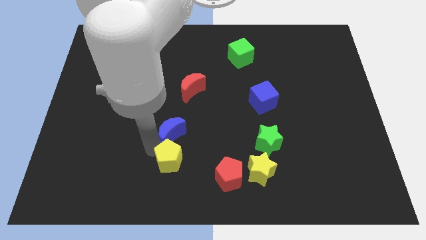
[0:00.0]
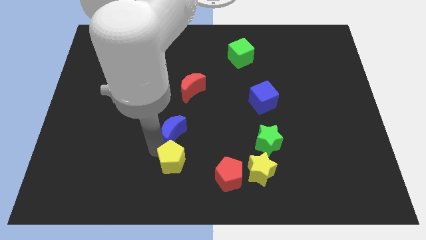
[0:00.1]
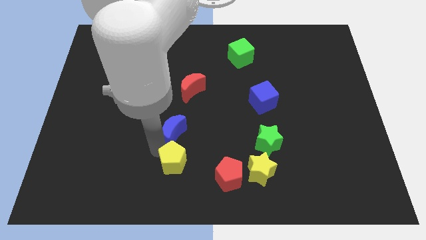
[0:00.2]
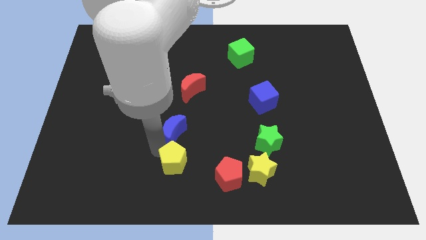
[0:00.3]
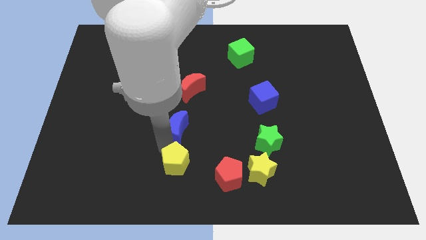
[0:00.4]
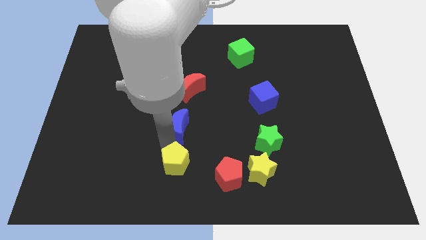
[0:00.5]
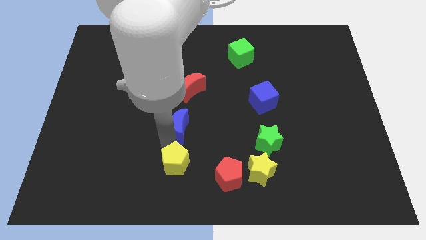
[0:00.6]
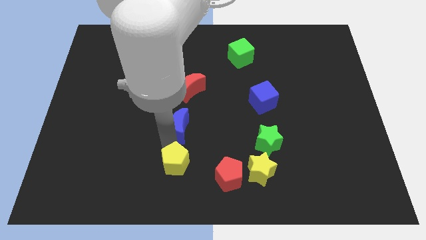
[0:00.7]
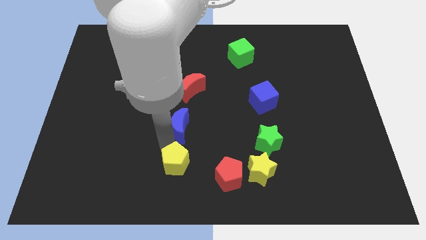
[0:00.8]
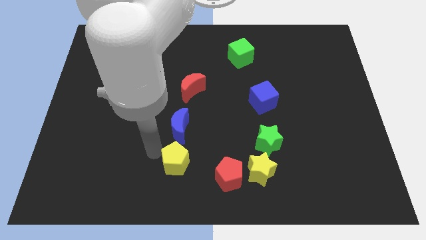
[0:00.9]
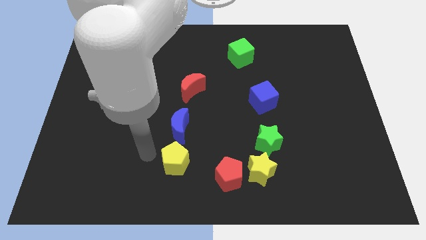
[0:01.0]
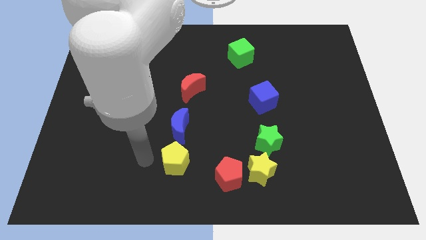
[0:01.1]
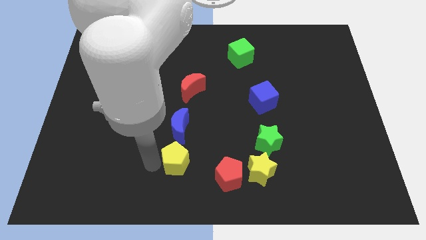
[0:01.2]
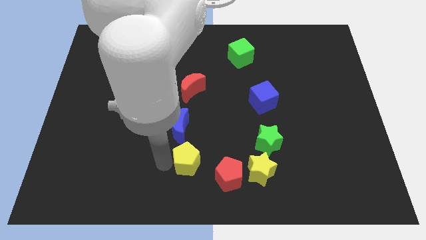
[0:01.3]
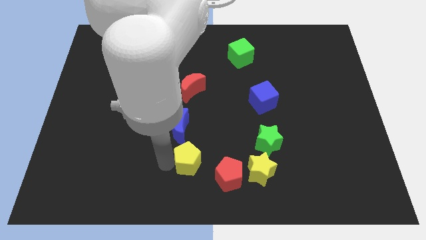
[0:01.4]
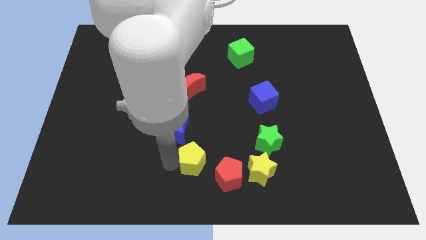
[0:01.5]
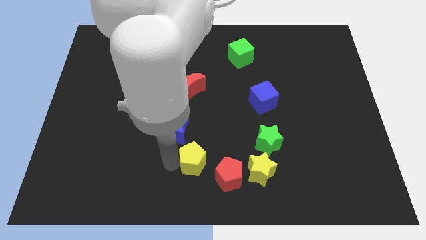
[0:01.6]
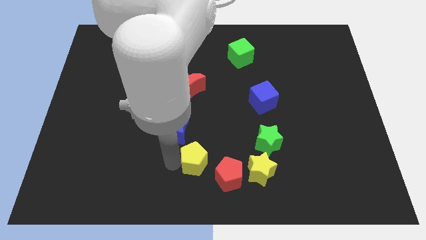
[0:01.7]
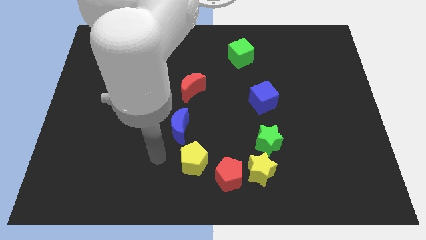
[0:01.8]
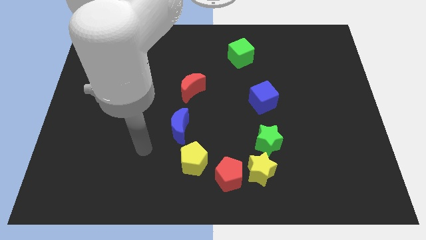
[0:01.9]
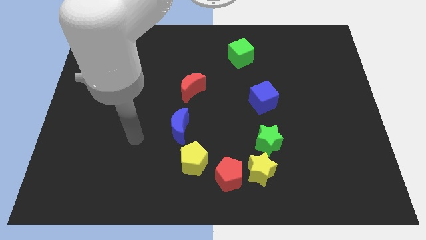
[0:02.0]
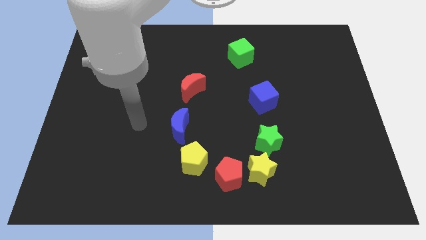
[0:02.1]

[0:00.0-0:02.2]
slide the yellow pentagon to the top left of red pentagon

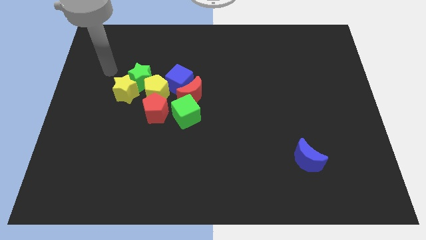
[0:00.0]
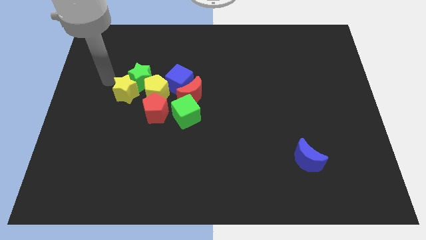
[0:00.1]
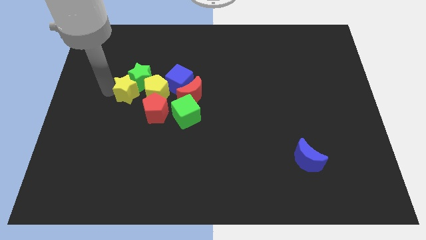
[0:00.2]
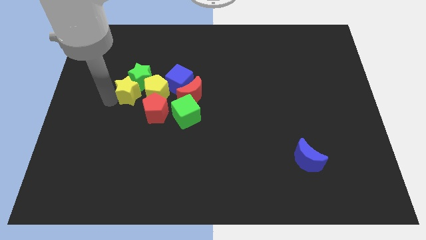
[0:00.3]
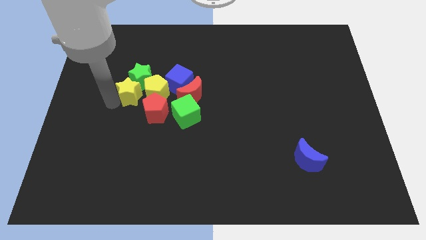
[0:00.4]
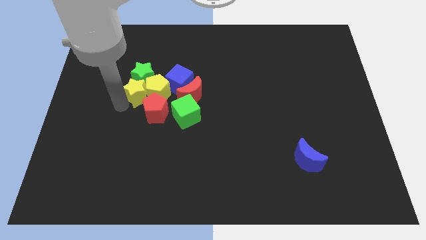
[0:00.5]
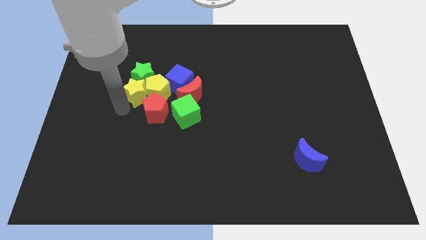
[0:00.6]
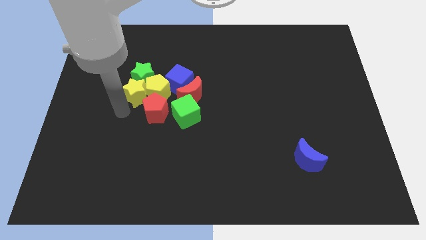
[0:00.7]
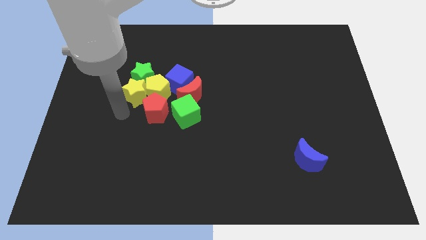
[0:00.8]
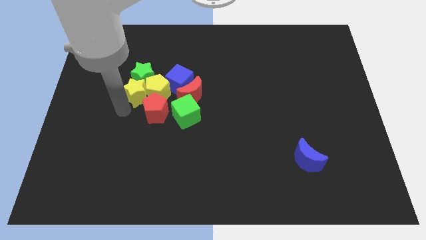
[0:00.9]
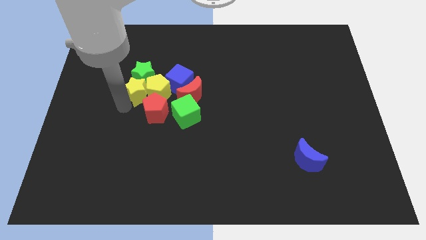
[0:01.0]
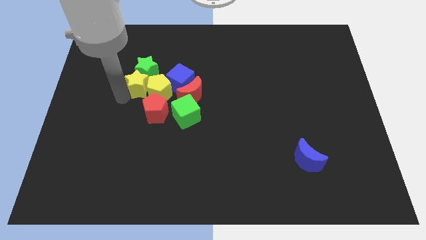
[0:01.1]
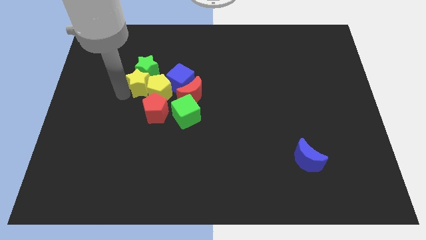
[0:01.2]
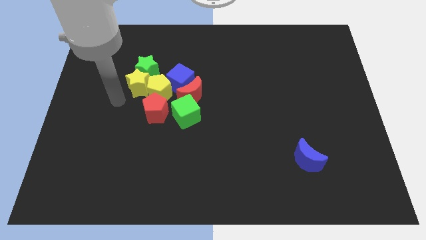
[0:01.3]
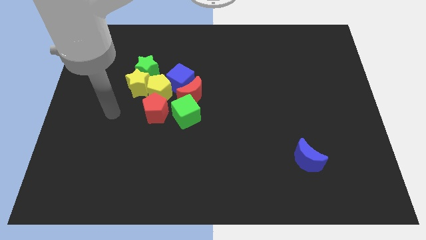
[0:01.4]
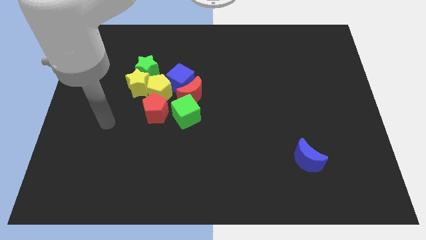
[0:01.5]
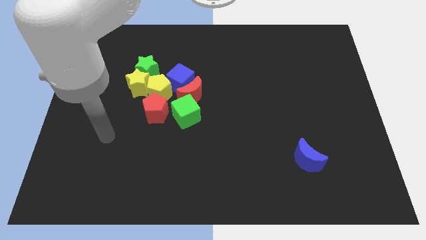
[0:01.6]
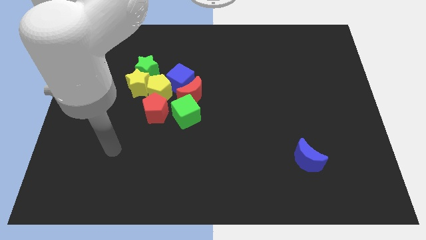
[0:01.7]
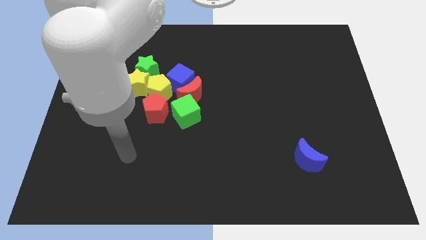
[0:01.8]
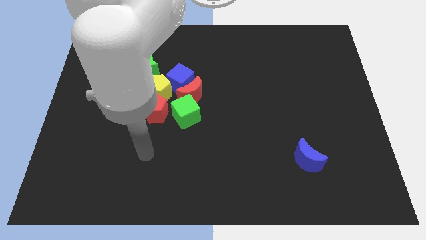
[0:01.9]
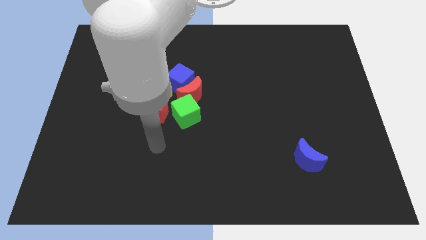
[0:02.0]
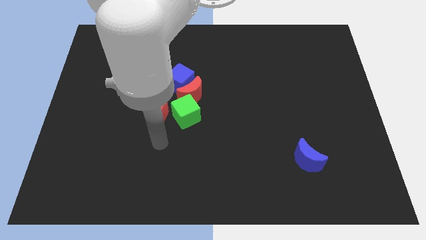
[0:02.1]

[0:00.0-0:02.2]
slightly move the yellow star to its right

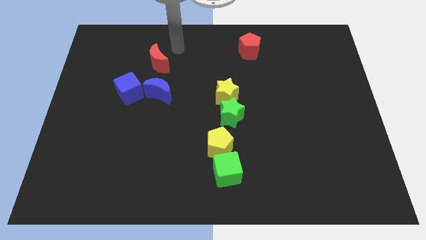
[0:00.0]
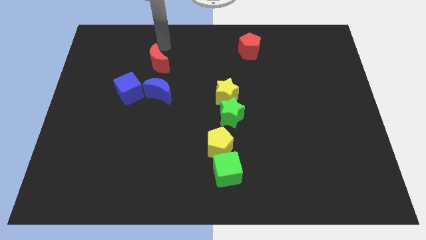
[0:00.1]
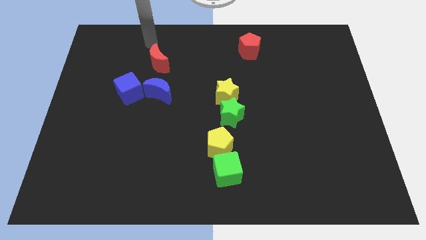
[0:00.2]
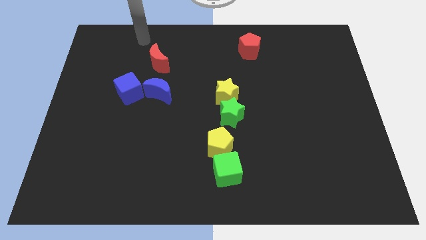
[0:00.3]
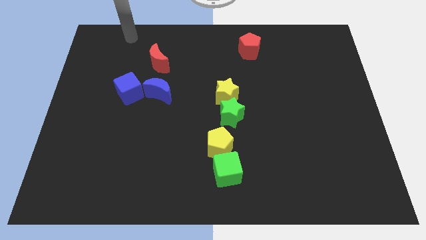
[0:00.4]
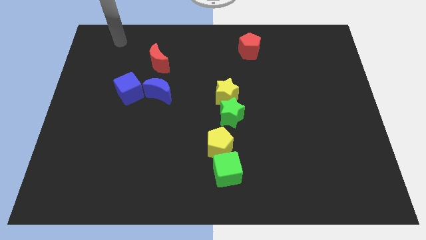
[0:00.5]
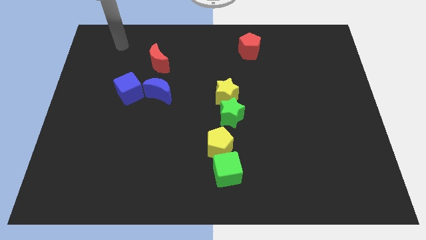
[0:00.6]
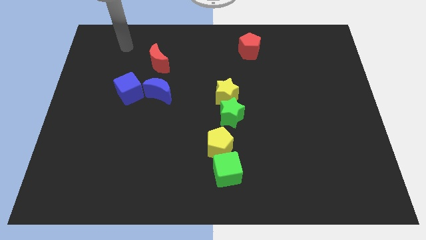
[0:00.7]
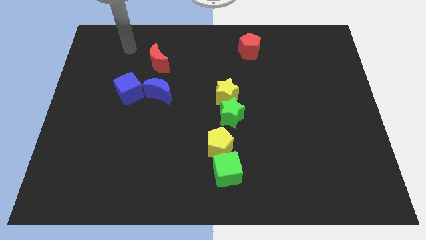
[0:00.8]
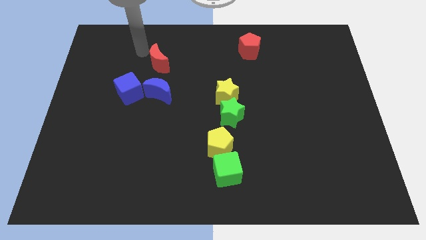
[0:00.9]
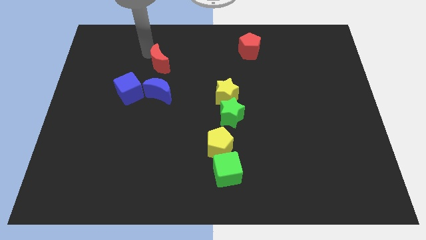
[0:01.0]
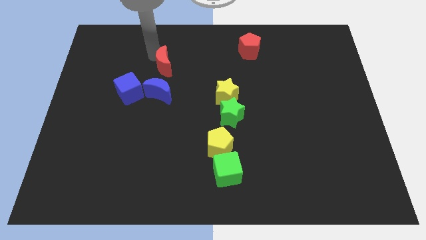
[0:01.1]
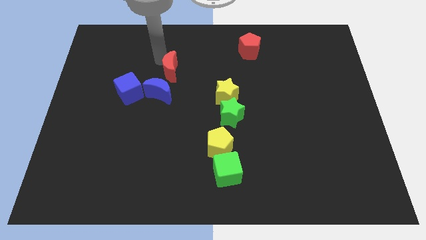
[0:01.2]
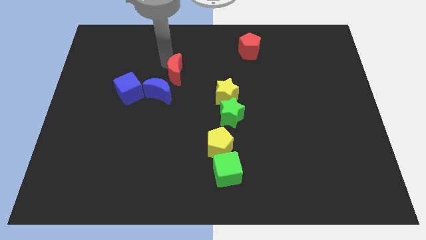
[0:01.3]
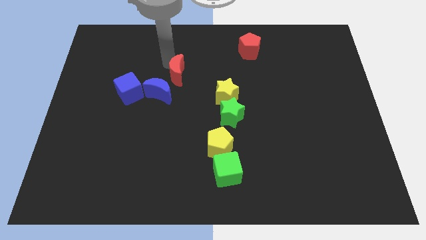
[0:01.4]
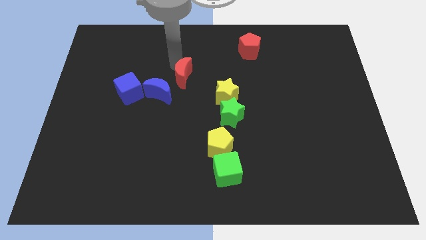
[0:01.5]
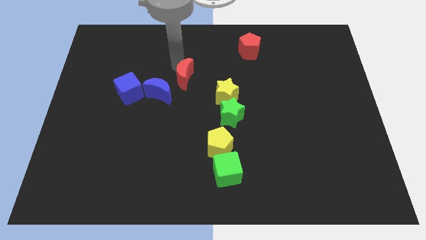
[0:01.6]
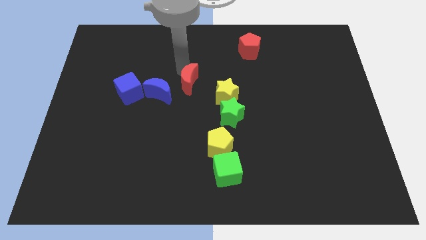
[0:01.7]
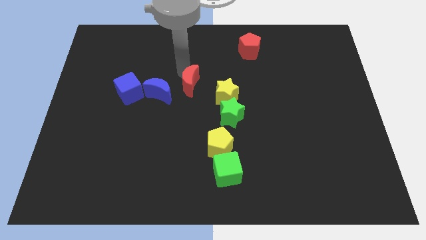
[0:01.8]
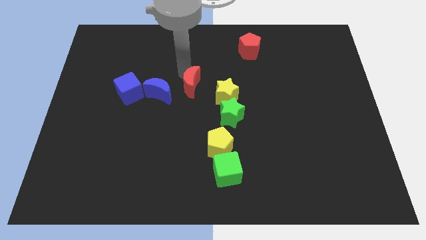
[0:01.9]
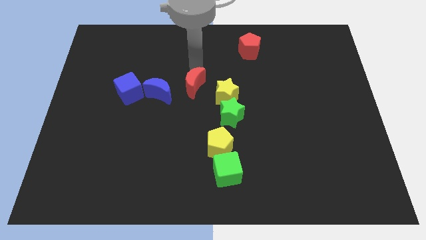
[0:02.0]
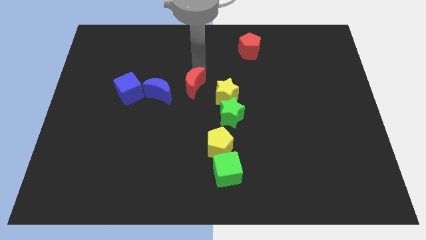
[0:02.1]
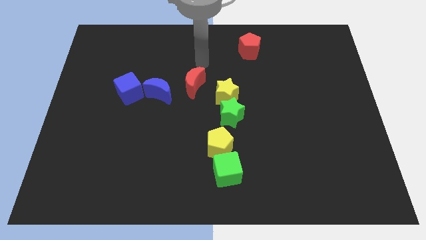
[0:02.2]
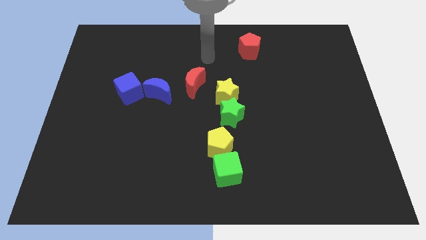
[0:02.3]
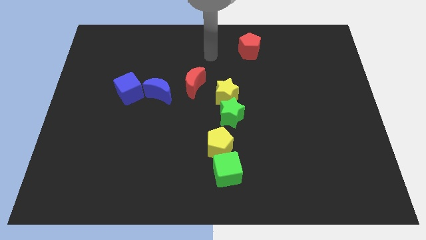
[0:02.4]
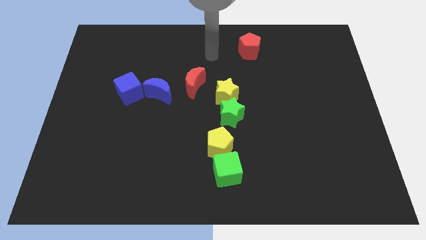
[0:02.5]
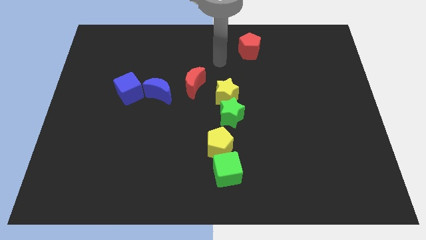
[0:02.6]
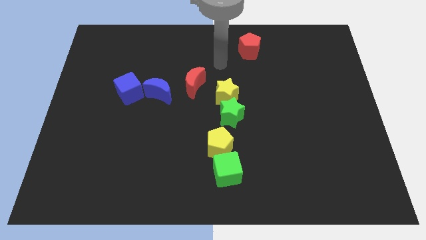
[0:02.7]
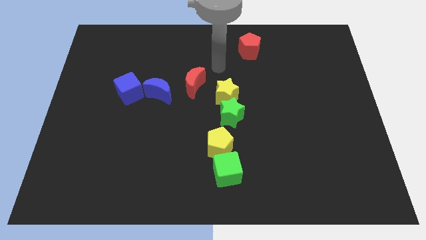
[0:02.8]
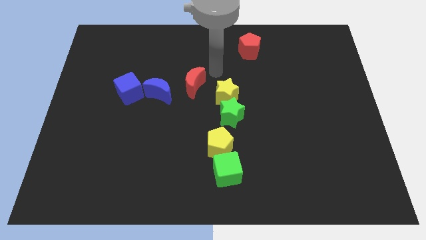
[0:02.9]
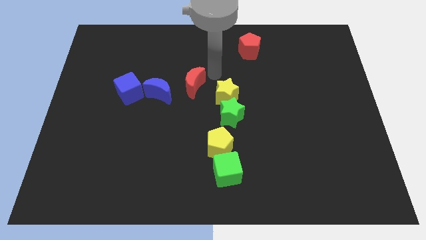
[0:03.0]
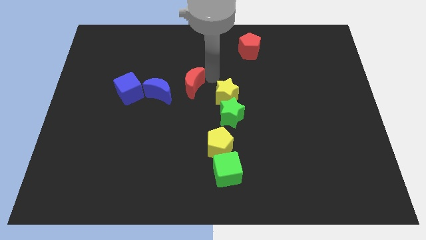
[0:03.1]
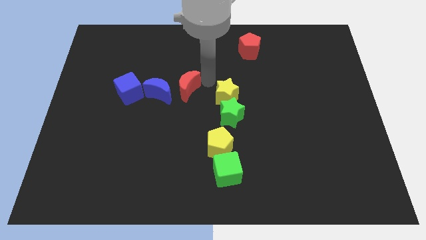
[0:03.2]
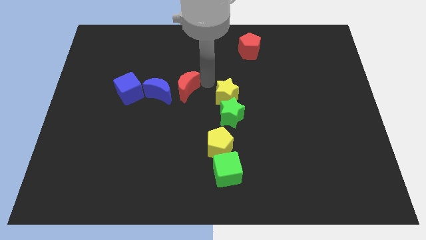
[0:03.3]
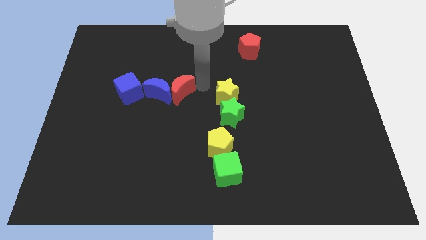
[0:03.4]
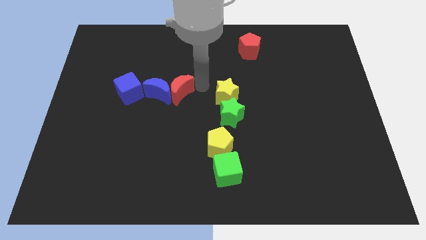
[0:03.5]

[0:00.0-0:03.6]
place the red crescent to the right of the blue moon

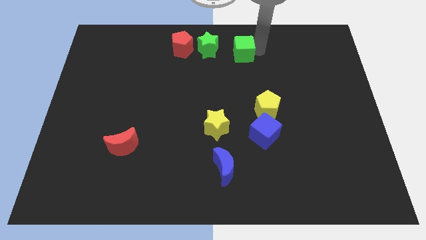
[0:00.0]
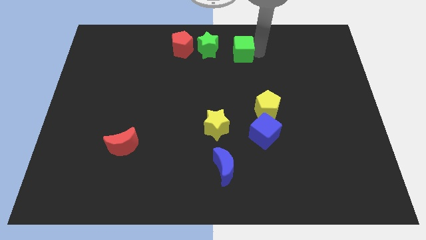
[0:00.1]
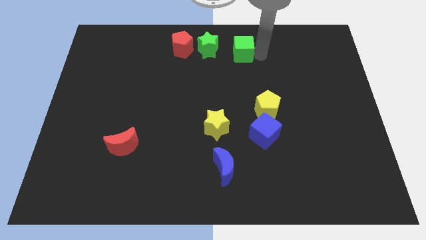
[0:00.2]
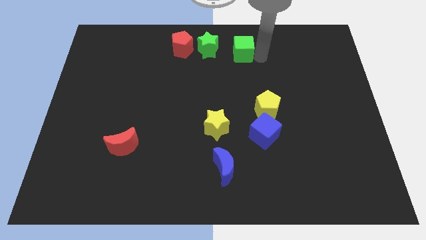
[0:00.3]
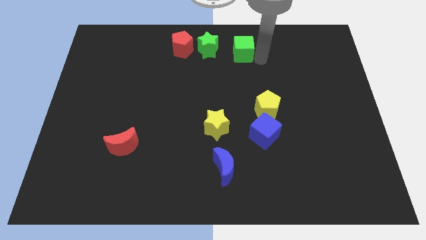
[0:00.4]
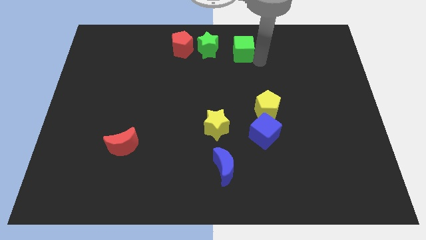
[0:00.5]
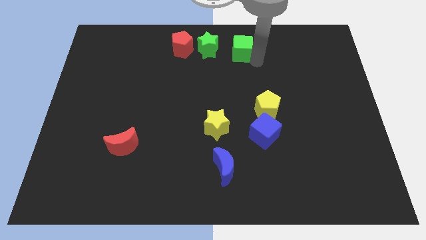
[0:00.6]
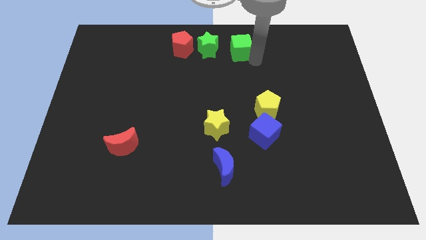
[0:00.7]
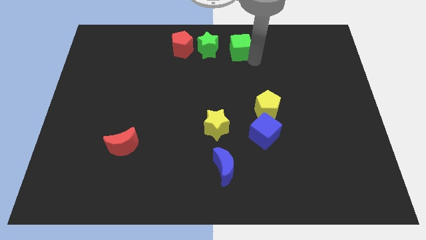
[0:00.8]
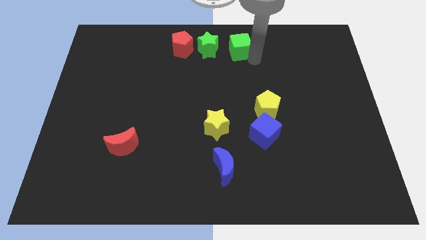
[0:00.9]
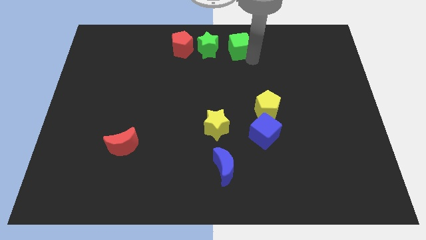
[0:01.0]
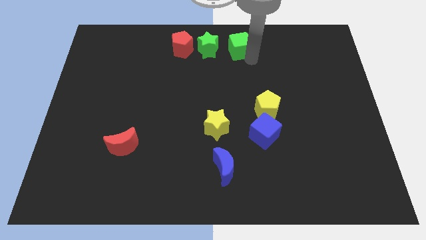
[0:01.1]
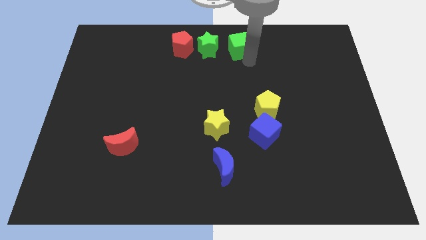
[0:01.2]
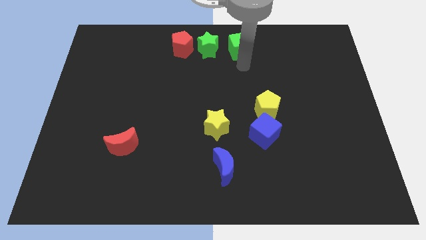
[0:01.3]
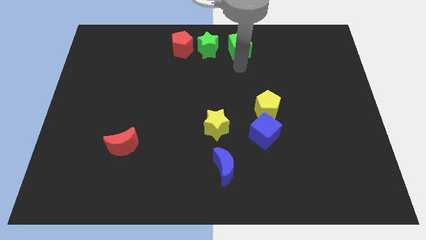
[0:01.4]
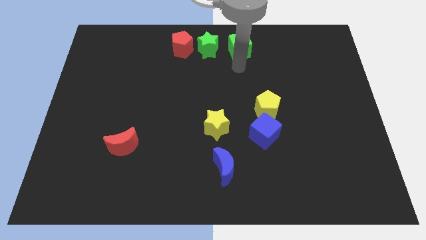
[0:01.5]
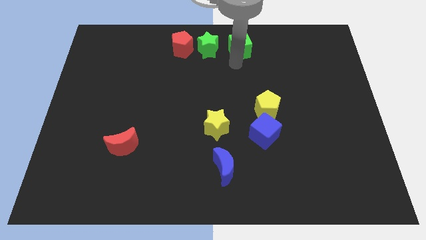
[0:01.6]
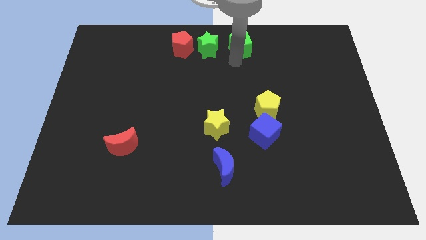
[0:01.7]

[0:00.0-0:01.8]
adjust the green cube
